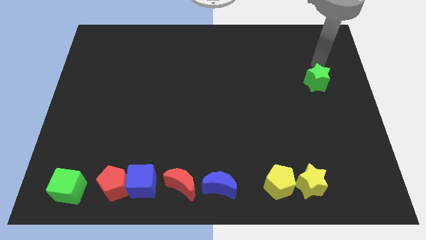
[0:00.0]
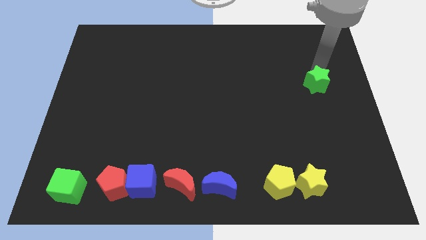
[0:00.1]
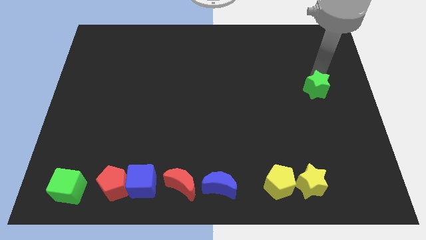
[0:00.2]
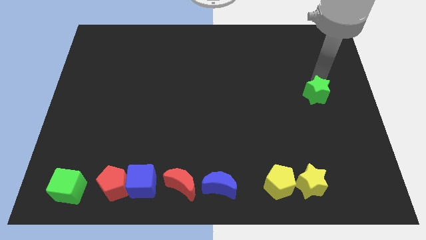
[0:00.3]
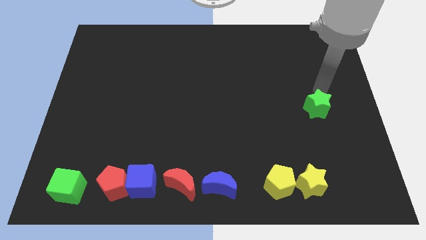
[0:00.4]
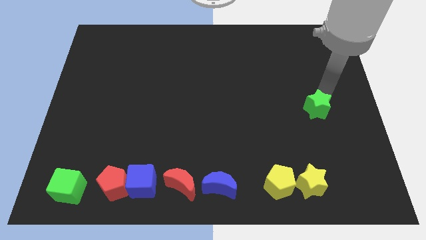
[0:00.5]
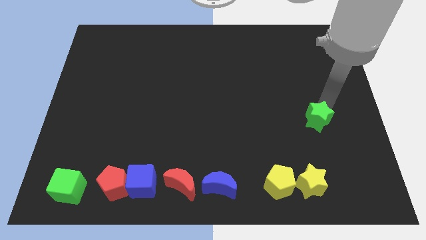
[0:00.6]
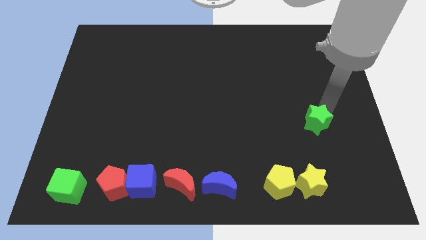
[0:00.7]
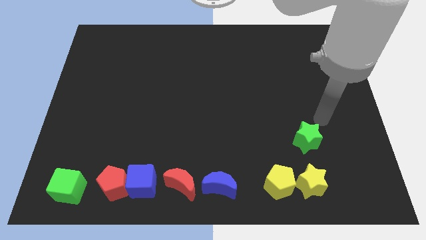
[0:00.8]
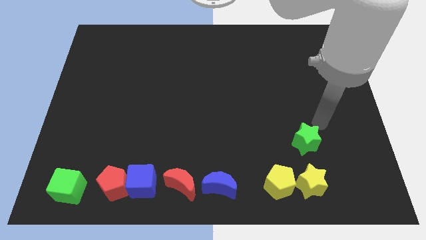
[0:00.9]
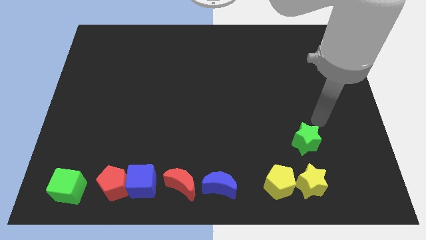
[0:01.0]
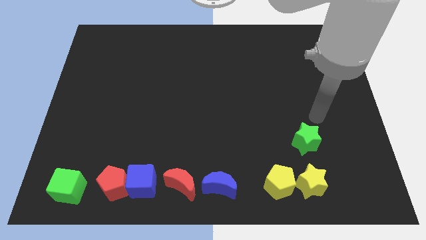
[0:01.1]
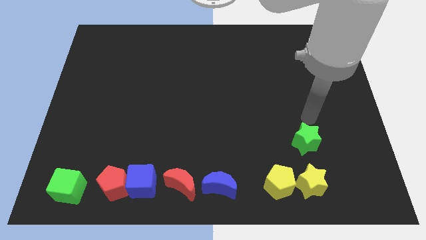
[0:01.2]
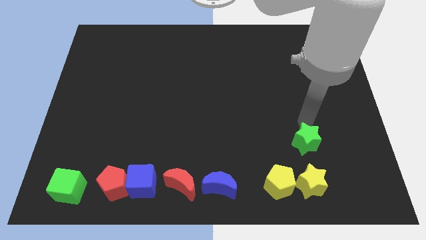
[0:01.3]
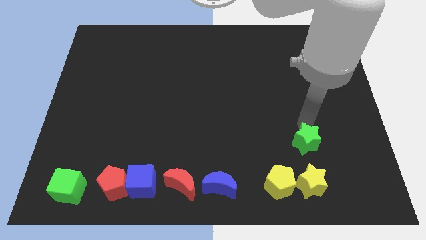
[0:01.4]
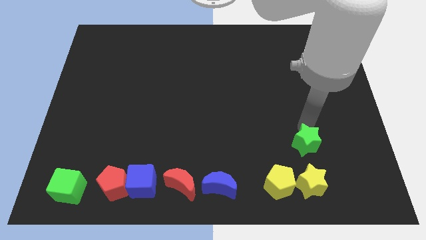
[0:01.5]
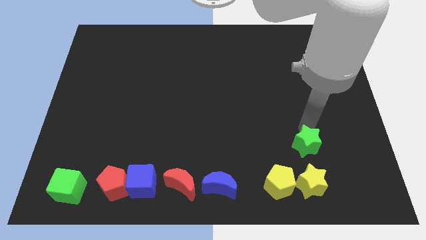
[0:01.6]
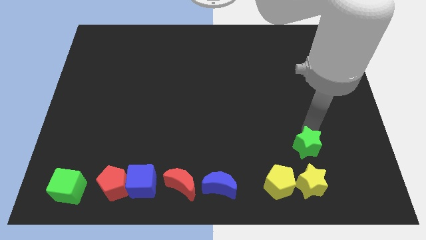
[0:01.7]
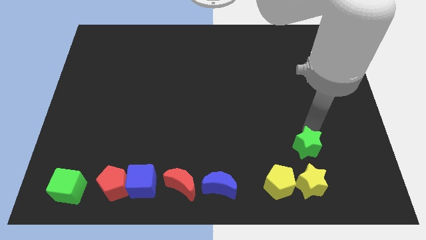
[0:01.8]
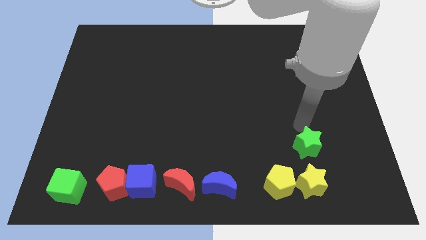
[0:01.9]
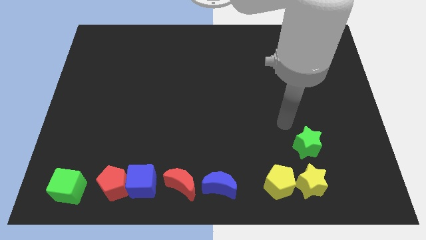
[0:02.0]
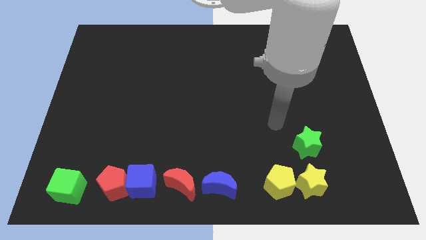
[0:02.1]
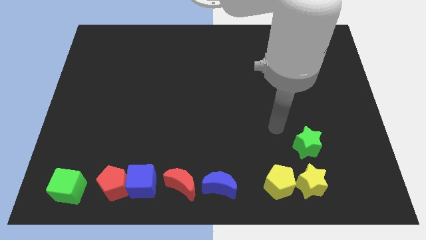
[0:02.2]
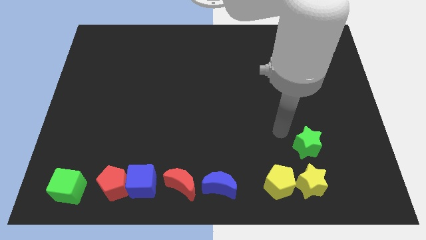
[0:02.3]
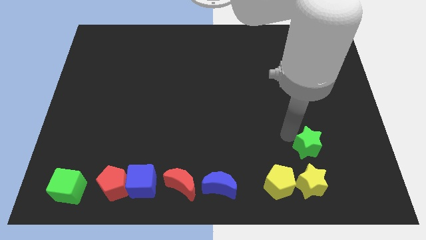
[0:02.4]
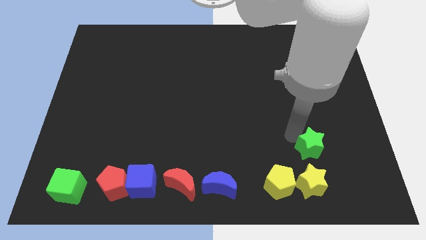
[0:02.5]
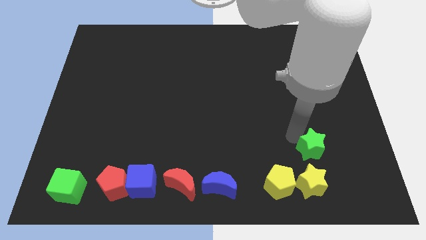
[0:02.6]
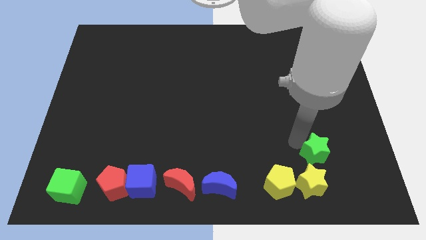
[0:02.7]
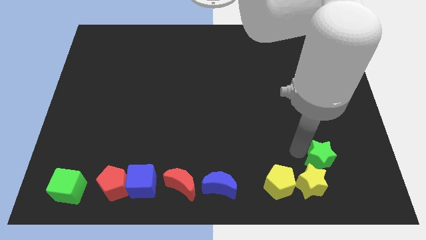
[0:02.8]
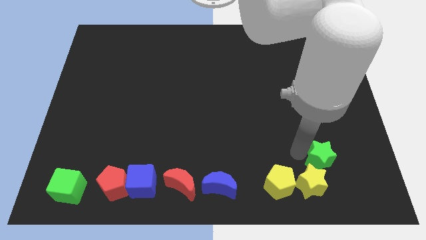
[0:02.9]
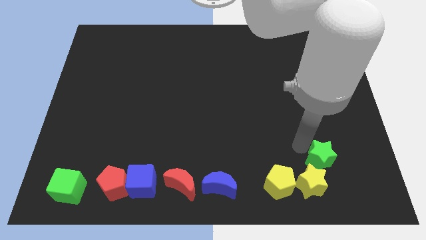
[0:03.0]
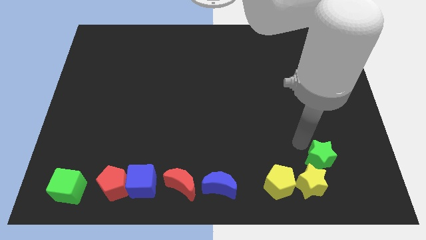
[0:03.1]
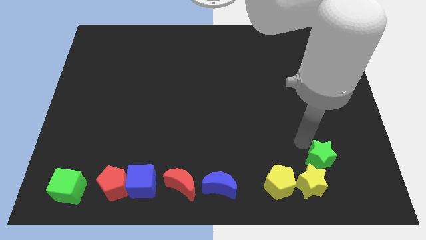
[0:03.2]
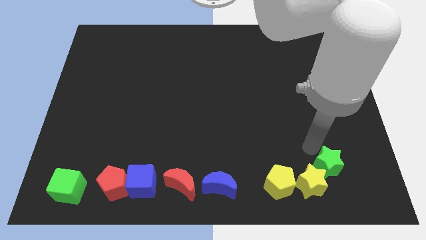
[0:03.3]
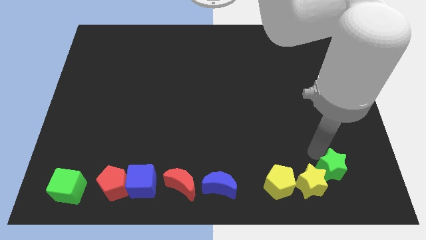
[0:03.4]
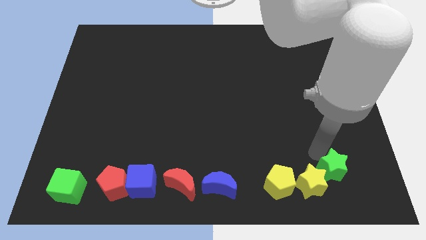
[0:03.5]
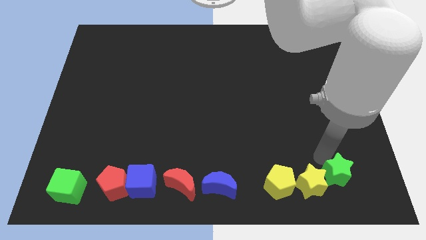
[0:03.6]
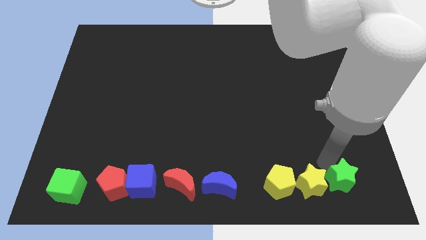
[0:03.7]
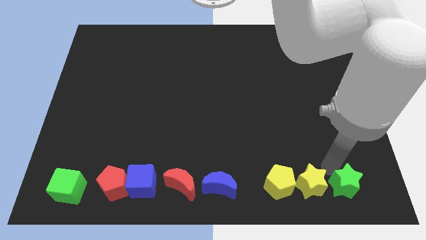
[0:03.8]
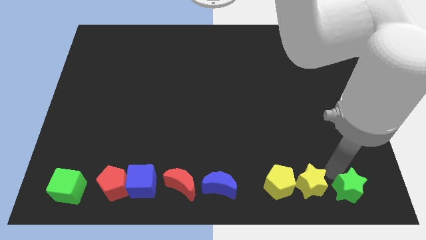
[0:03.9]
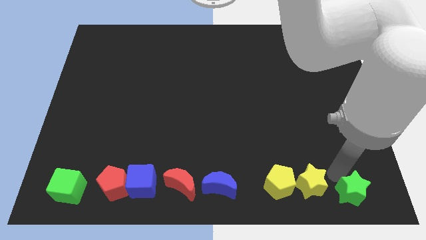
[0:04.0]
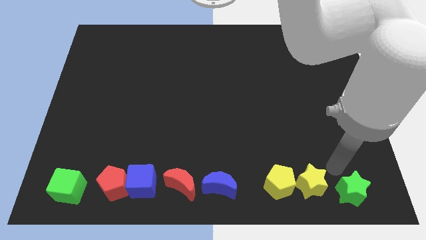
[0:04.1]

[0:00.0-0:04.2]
move the green star to right side of the yellow star

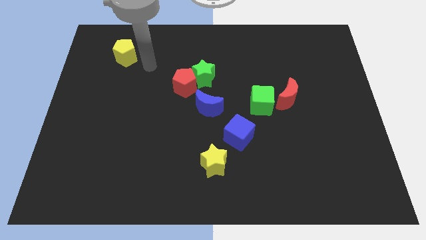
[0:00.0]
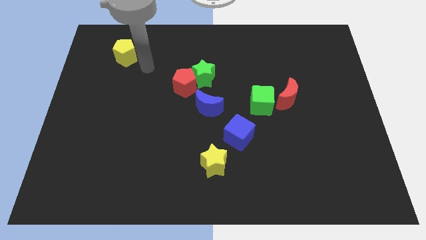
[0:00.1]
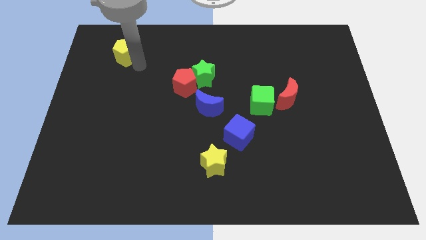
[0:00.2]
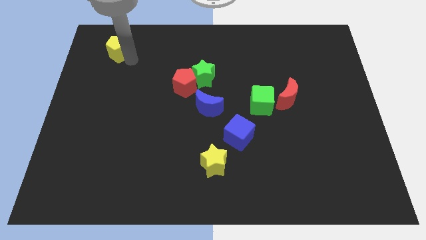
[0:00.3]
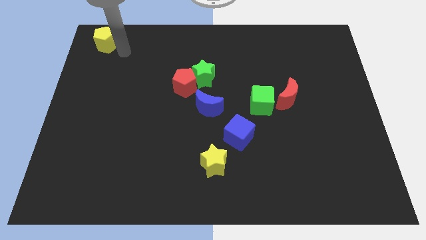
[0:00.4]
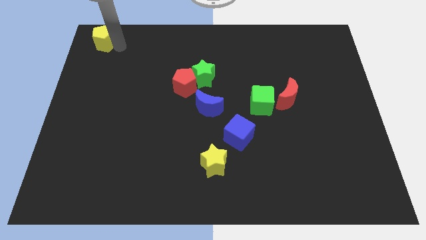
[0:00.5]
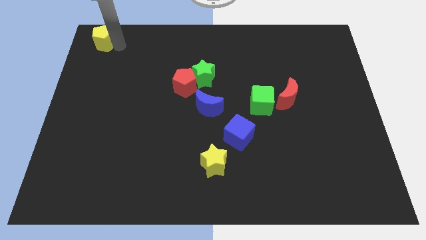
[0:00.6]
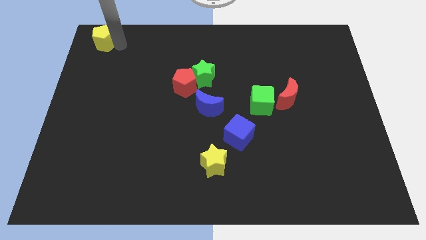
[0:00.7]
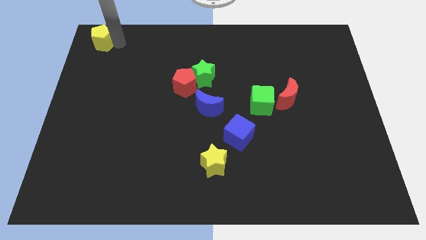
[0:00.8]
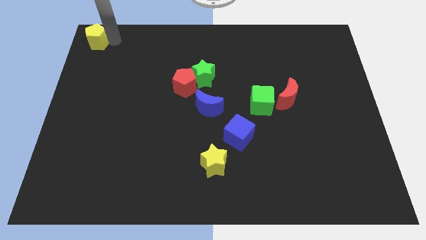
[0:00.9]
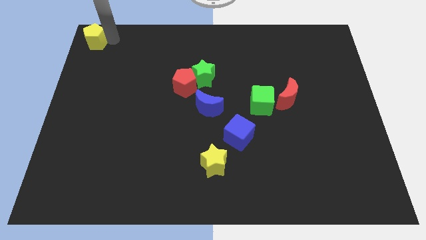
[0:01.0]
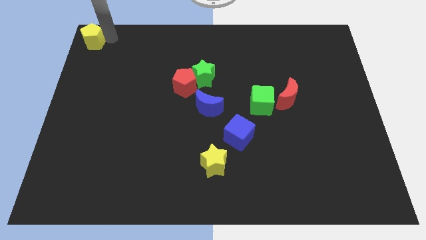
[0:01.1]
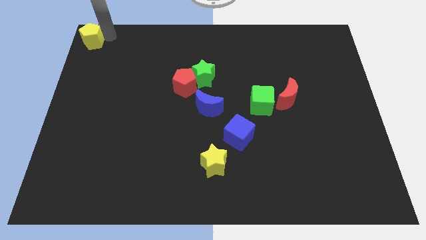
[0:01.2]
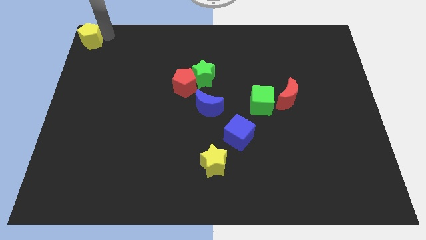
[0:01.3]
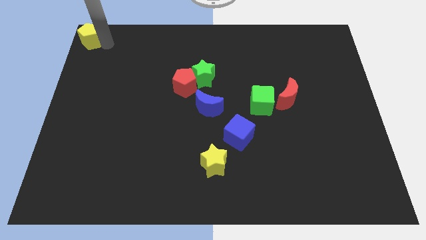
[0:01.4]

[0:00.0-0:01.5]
push the yellow pentagon to the top left of the board

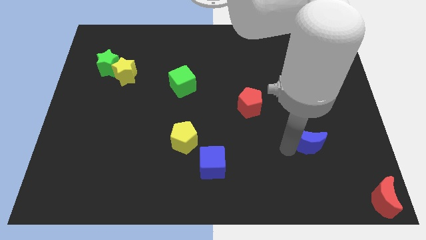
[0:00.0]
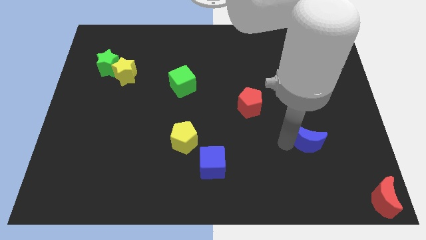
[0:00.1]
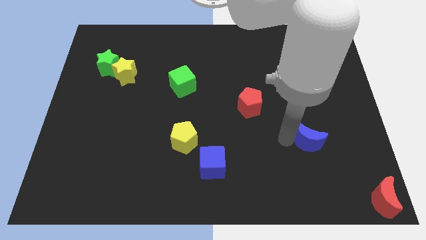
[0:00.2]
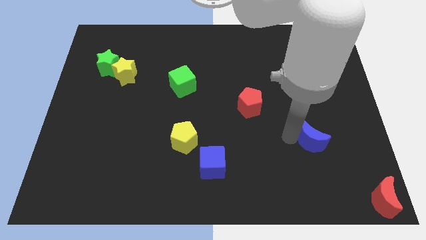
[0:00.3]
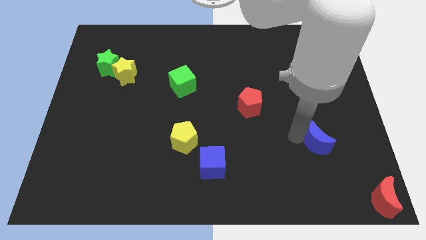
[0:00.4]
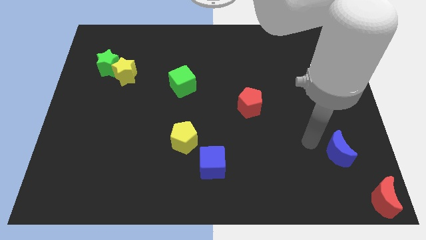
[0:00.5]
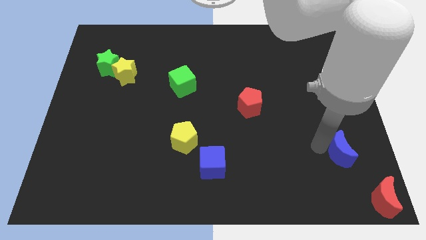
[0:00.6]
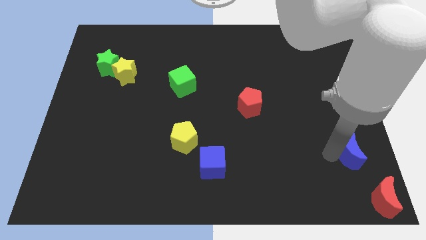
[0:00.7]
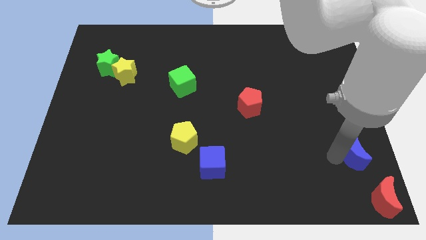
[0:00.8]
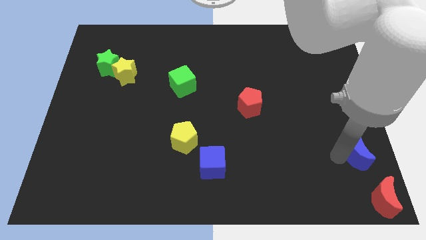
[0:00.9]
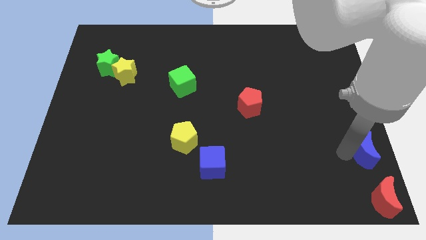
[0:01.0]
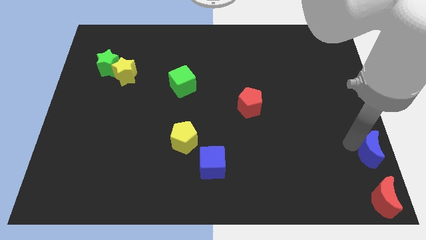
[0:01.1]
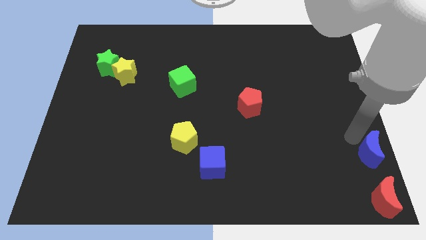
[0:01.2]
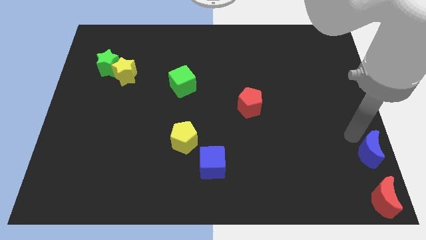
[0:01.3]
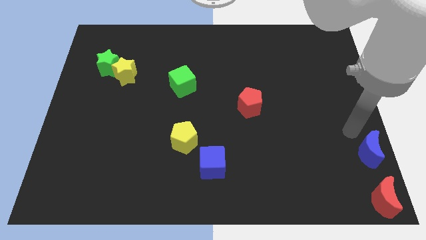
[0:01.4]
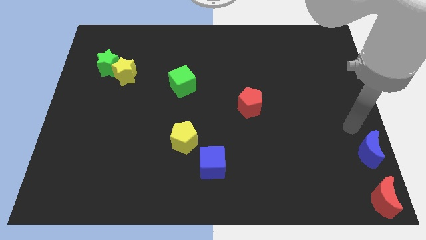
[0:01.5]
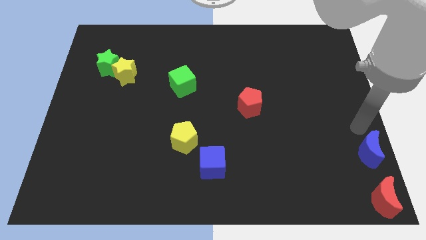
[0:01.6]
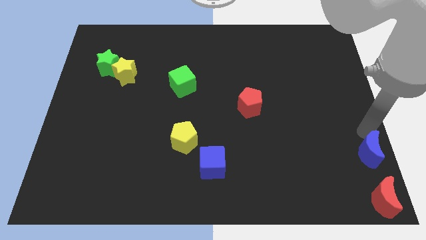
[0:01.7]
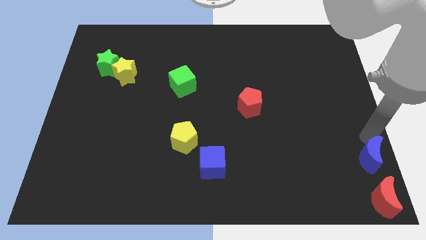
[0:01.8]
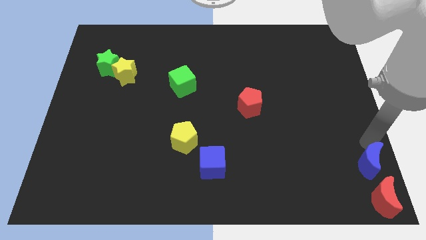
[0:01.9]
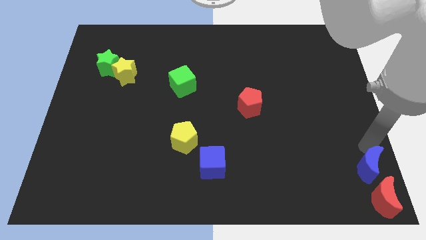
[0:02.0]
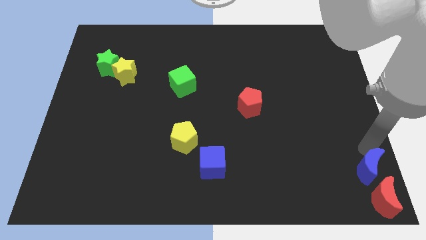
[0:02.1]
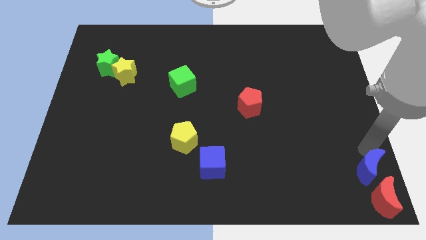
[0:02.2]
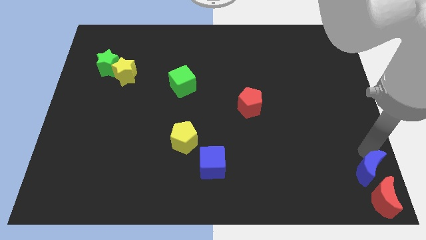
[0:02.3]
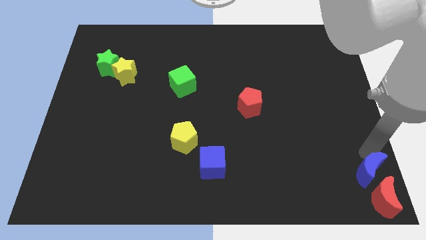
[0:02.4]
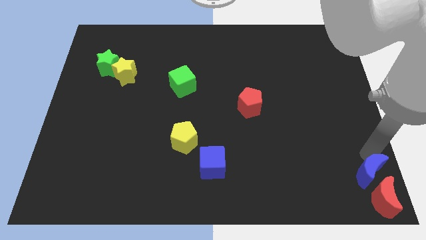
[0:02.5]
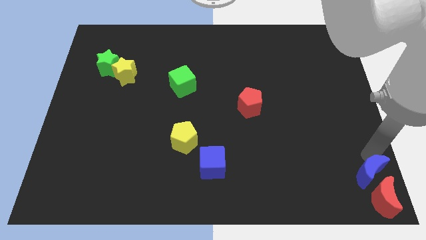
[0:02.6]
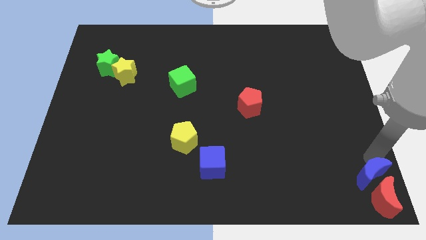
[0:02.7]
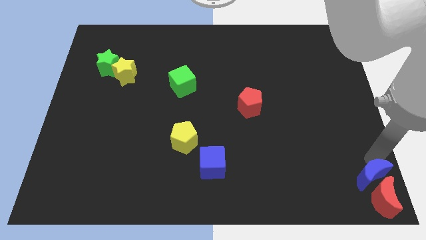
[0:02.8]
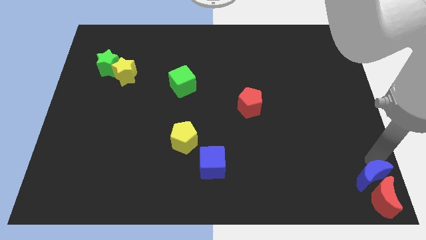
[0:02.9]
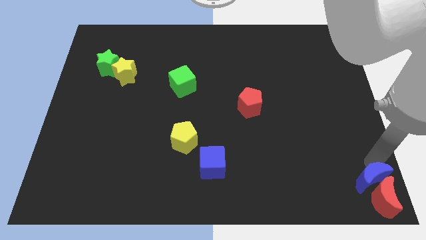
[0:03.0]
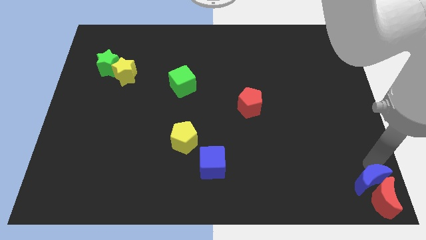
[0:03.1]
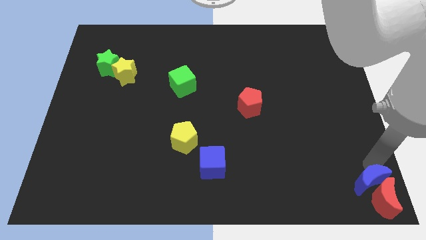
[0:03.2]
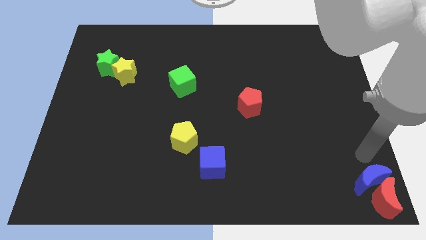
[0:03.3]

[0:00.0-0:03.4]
push the blue crescent into the red crescent
